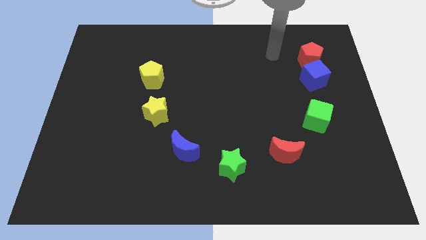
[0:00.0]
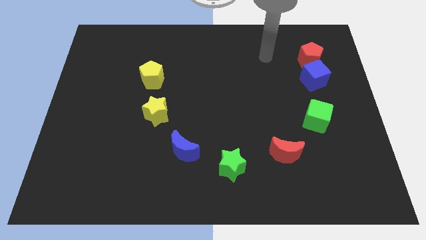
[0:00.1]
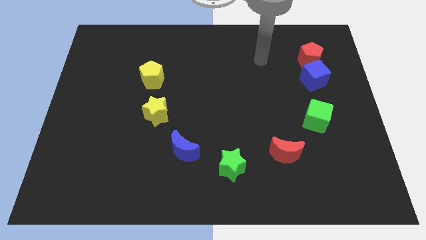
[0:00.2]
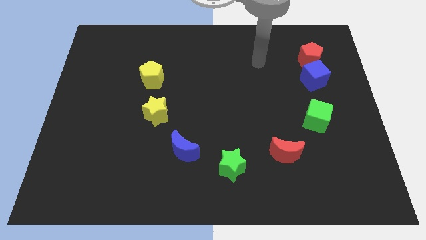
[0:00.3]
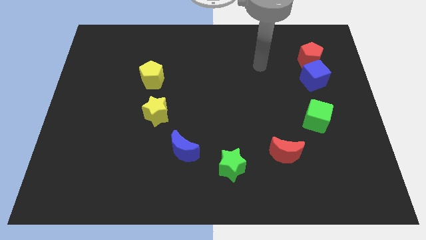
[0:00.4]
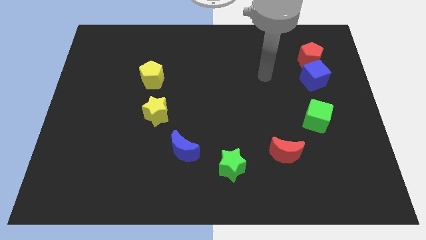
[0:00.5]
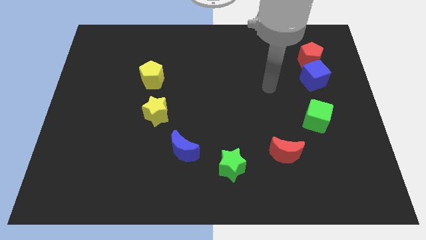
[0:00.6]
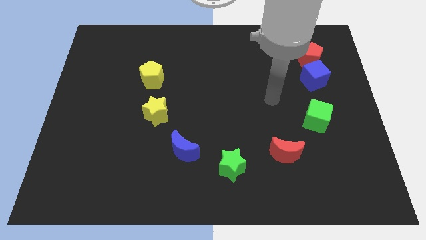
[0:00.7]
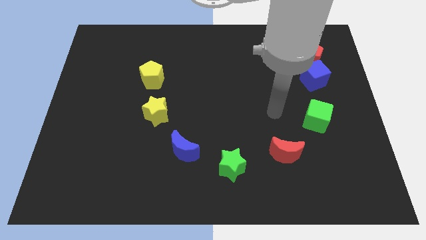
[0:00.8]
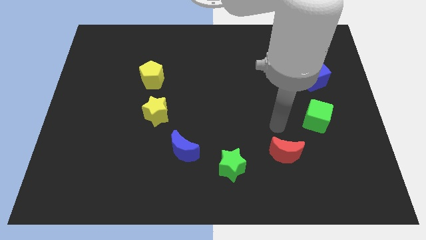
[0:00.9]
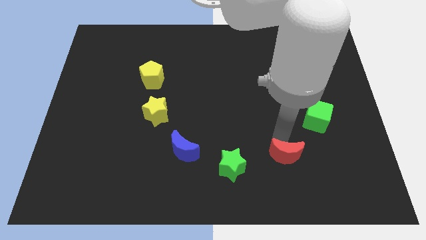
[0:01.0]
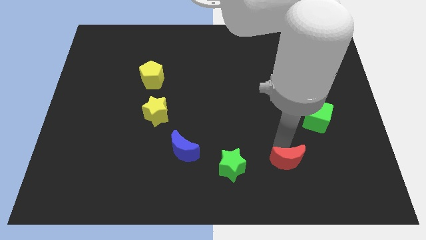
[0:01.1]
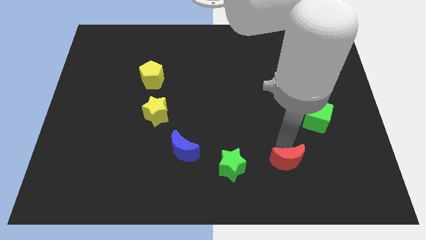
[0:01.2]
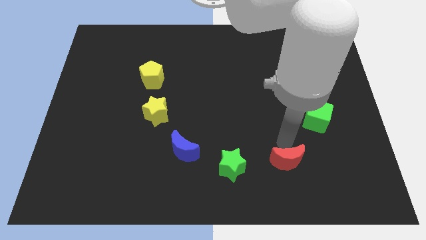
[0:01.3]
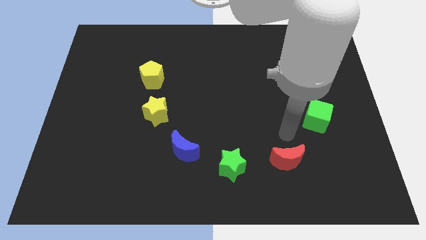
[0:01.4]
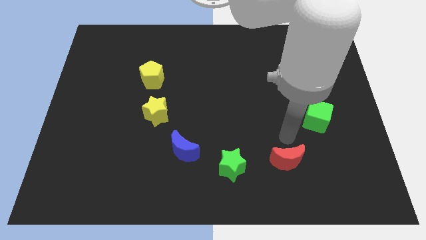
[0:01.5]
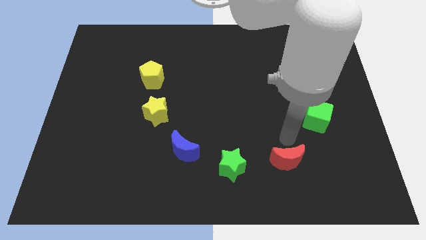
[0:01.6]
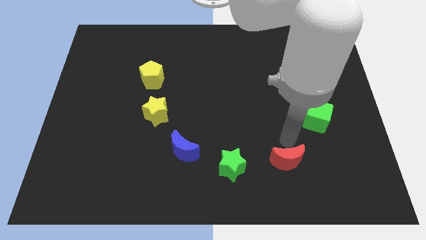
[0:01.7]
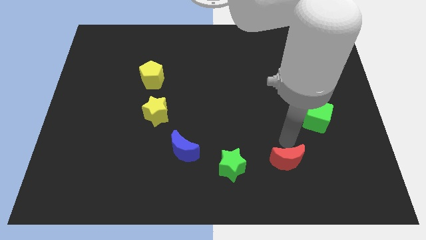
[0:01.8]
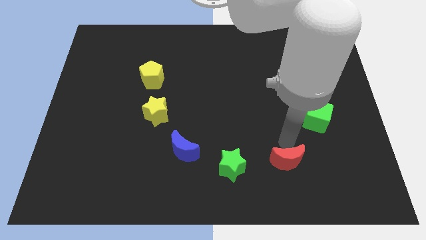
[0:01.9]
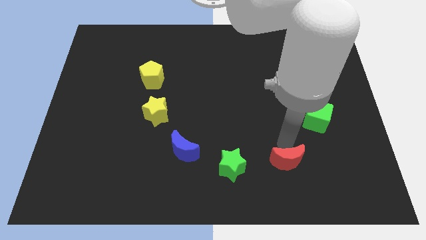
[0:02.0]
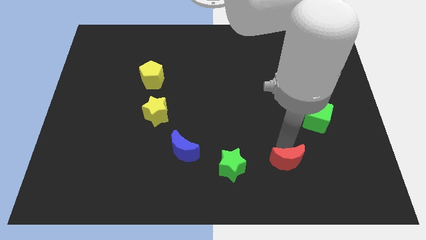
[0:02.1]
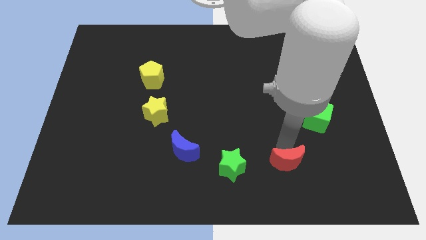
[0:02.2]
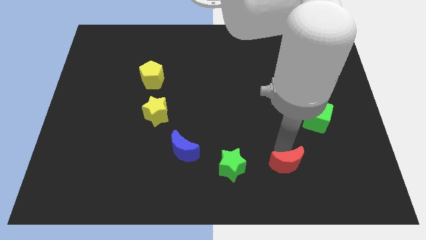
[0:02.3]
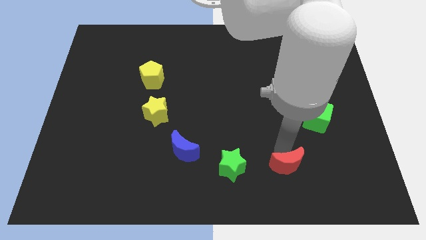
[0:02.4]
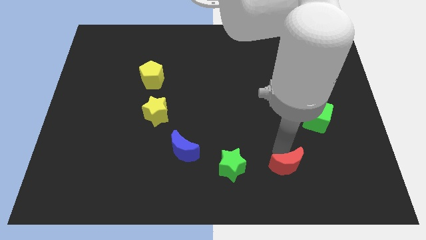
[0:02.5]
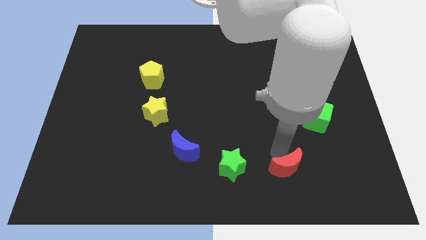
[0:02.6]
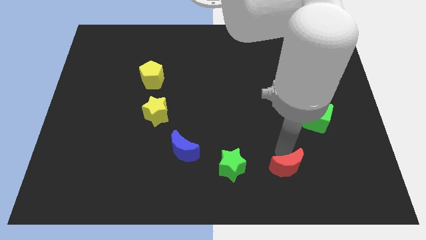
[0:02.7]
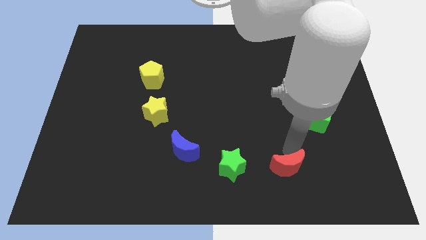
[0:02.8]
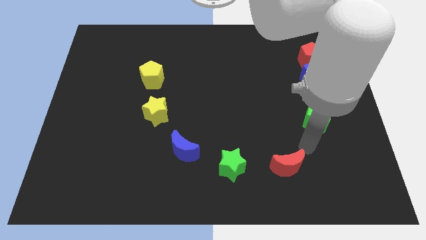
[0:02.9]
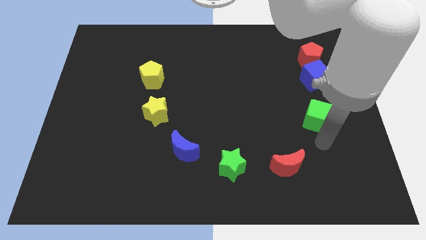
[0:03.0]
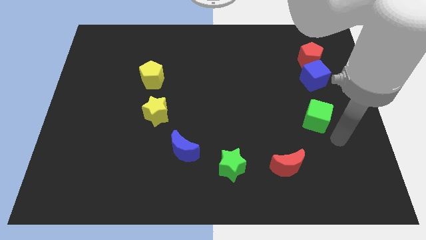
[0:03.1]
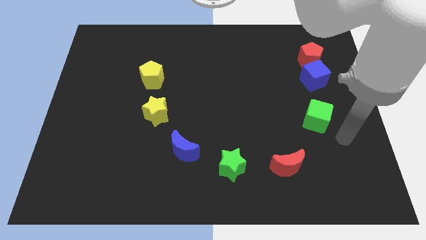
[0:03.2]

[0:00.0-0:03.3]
push the red moon downwards slightly

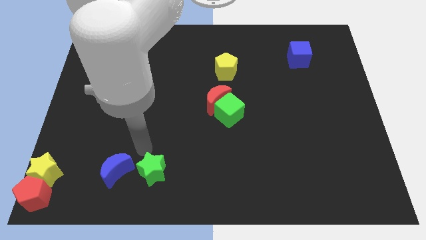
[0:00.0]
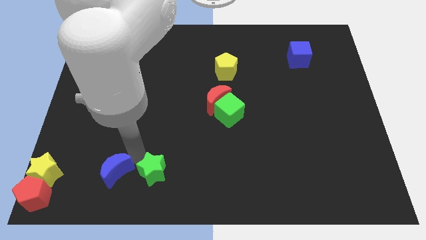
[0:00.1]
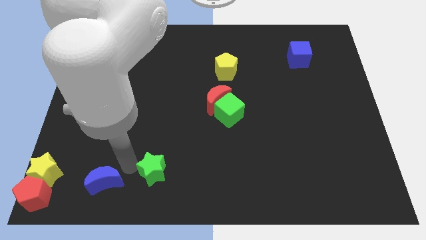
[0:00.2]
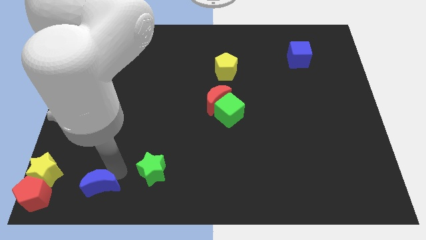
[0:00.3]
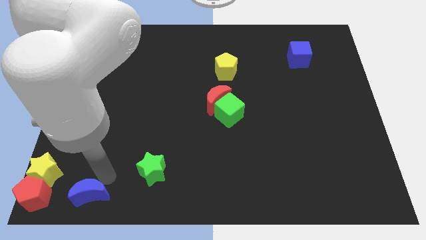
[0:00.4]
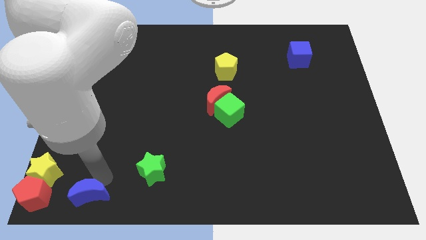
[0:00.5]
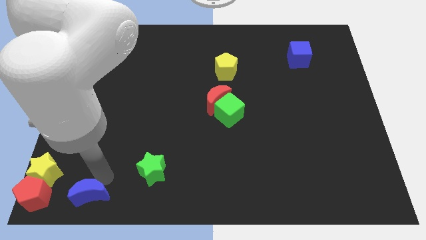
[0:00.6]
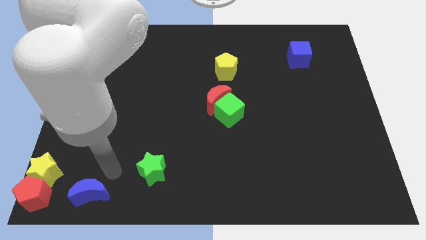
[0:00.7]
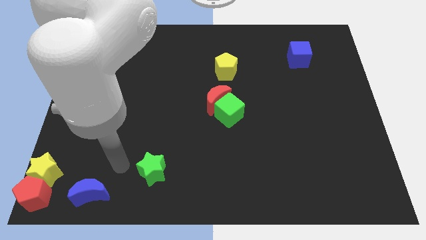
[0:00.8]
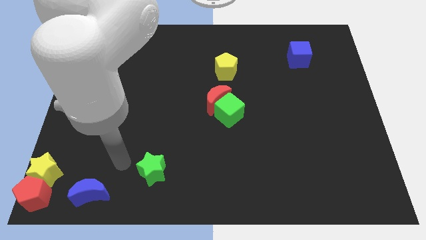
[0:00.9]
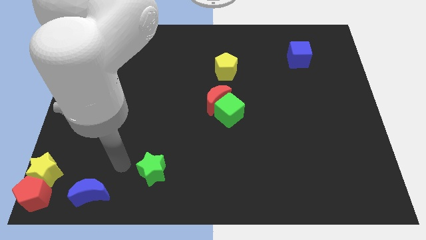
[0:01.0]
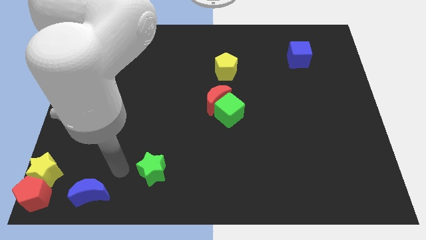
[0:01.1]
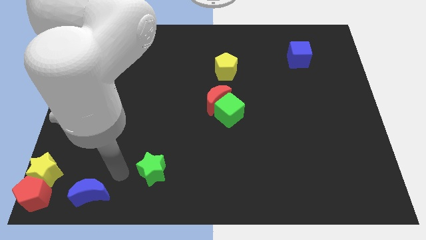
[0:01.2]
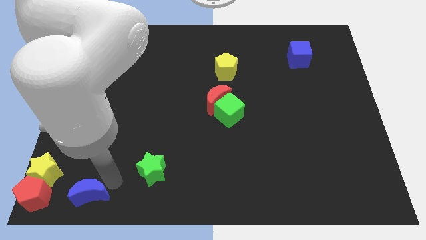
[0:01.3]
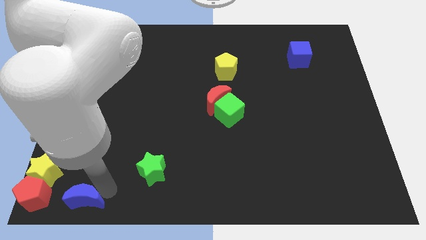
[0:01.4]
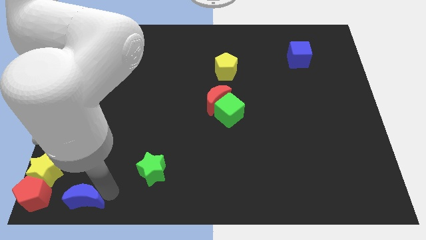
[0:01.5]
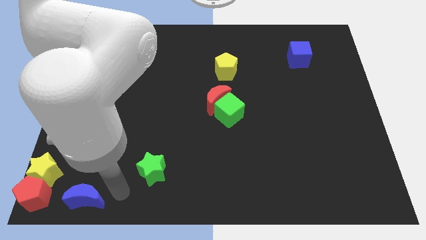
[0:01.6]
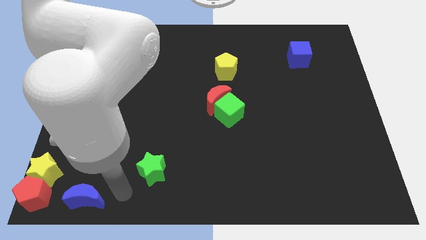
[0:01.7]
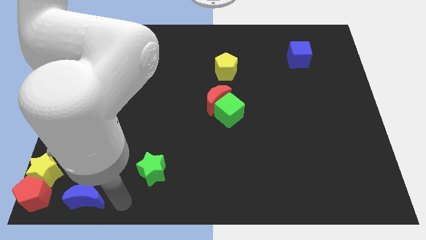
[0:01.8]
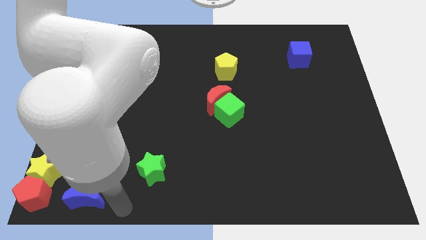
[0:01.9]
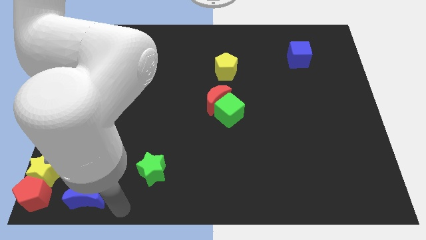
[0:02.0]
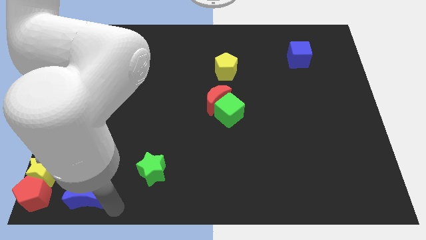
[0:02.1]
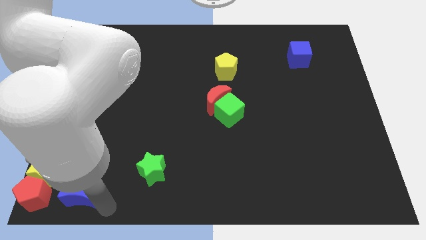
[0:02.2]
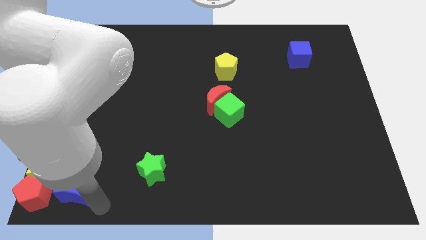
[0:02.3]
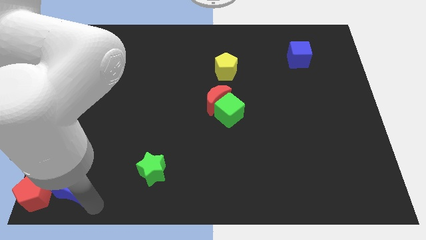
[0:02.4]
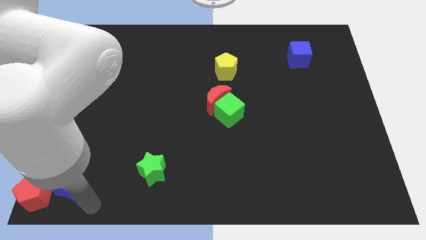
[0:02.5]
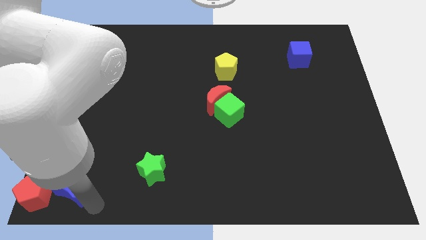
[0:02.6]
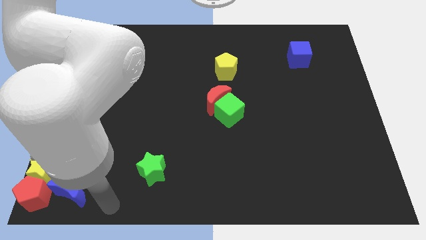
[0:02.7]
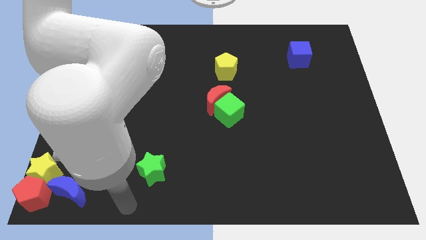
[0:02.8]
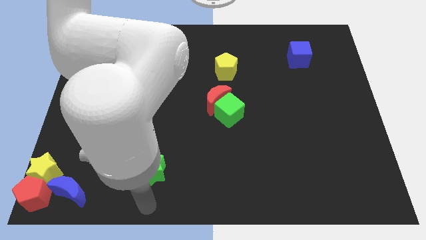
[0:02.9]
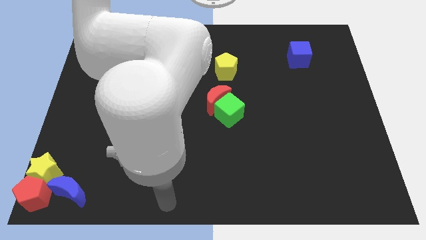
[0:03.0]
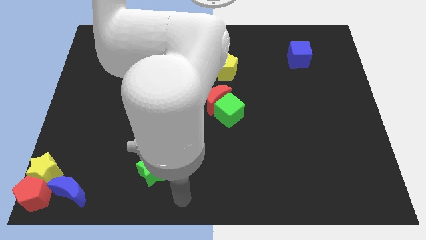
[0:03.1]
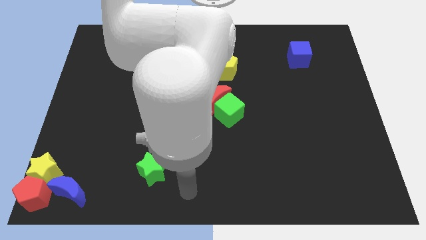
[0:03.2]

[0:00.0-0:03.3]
put the blue moon to the left side of red pentagon

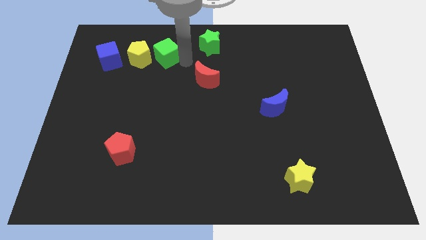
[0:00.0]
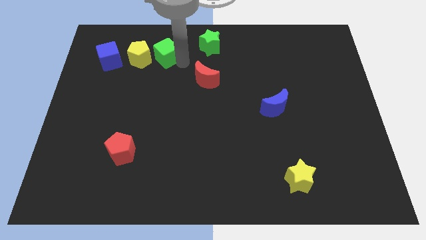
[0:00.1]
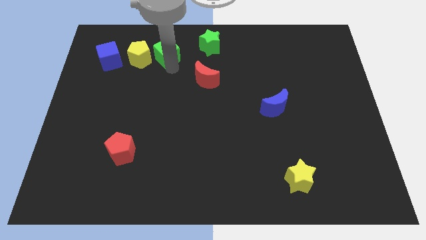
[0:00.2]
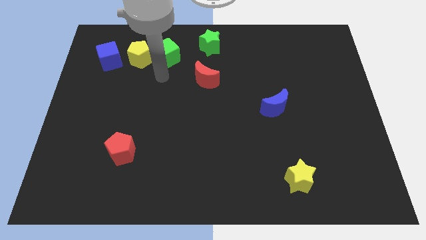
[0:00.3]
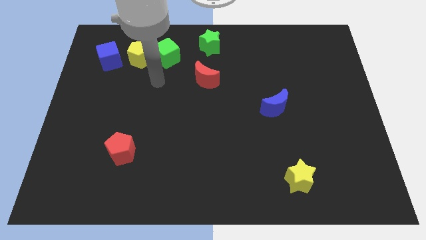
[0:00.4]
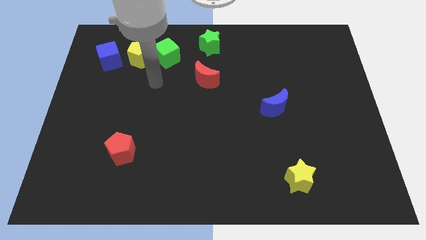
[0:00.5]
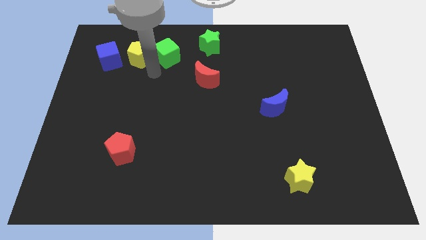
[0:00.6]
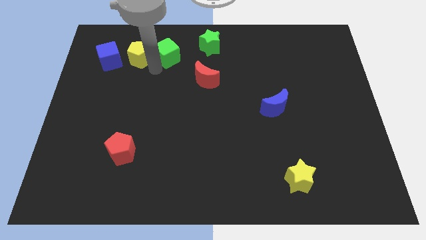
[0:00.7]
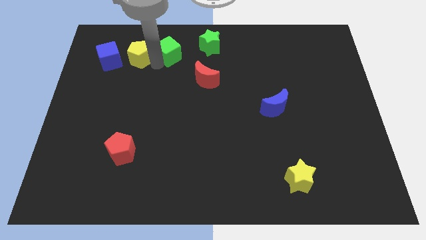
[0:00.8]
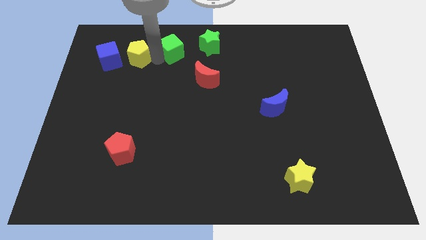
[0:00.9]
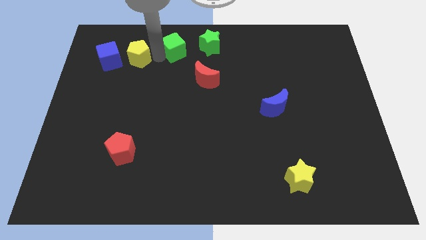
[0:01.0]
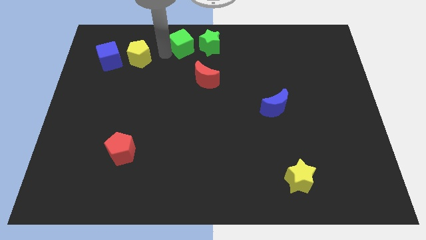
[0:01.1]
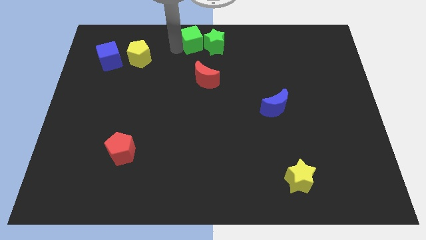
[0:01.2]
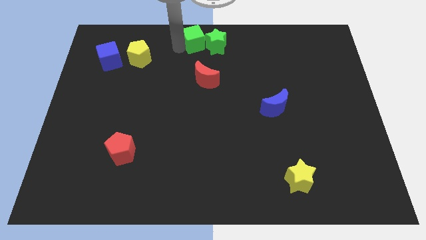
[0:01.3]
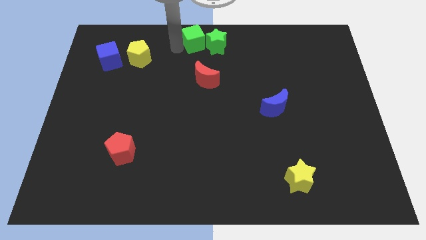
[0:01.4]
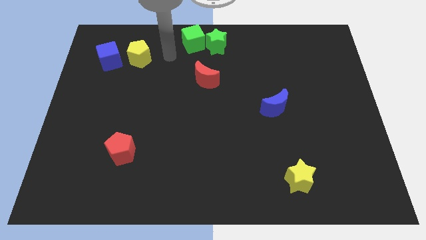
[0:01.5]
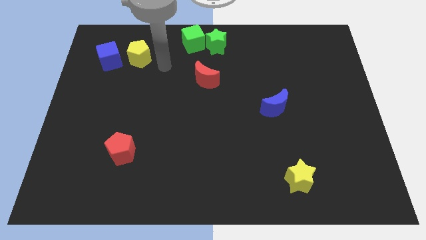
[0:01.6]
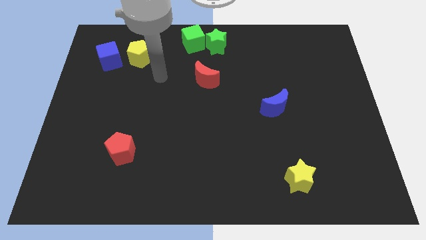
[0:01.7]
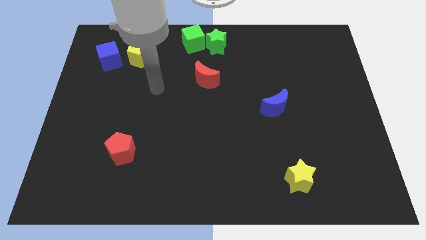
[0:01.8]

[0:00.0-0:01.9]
push the green cube close to green star

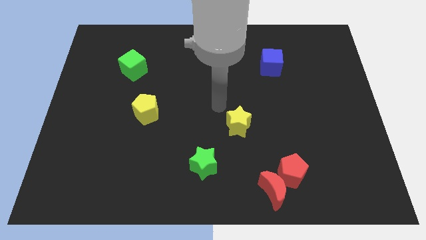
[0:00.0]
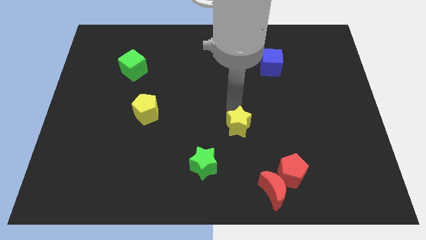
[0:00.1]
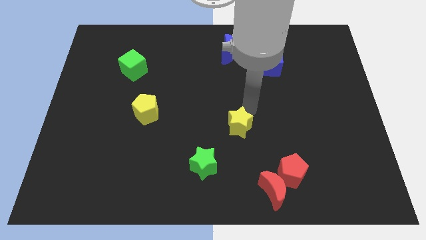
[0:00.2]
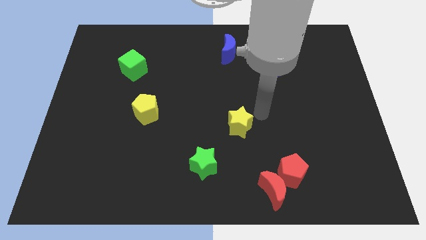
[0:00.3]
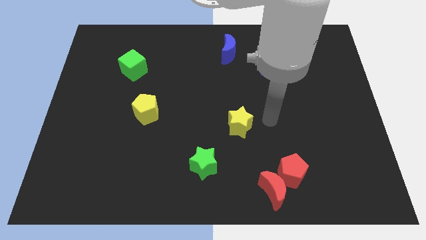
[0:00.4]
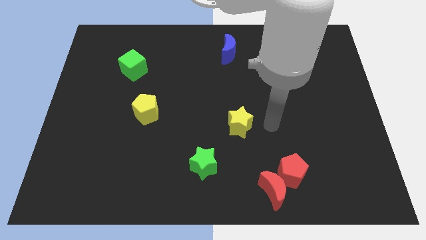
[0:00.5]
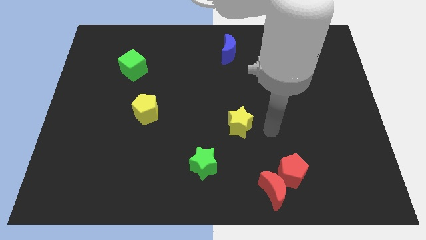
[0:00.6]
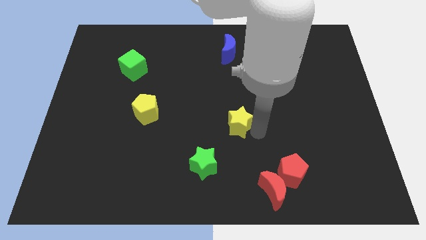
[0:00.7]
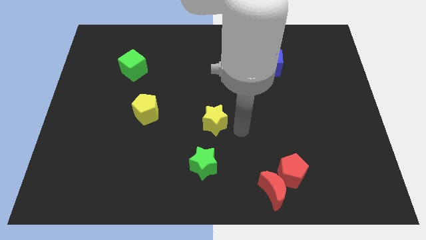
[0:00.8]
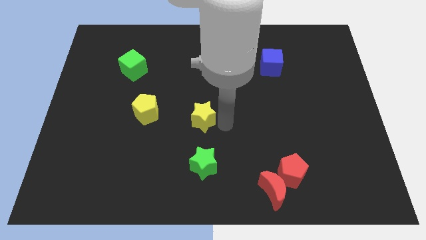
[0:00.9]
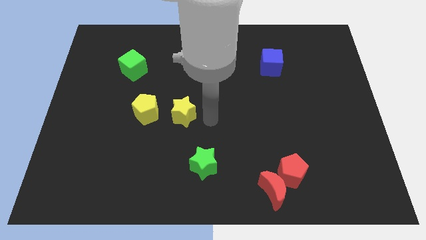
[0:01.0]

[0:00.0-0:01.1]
place the yellow star diagonal above the green star
